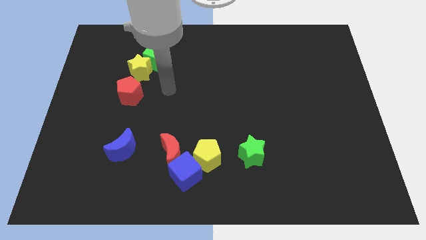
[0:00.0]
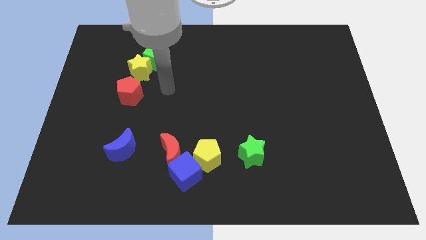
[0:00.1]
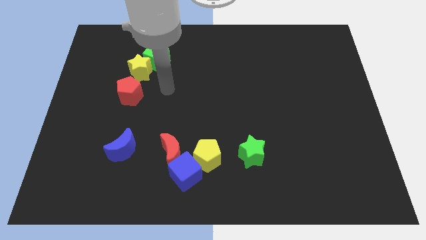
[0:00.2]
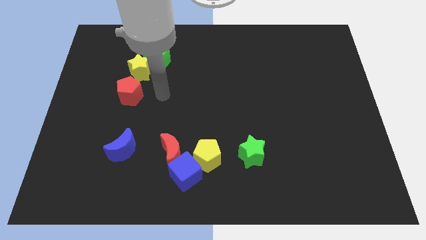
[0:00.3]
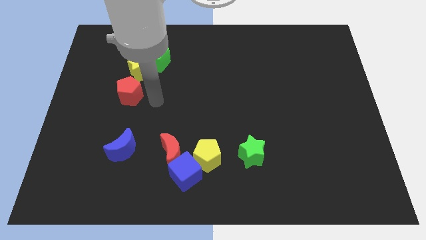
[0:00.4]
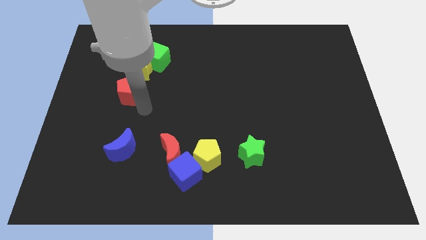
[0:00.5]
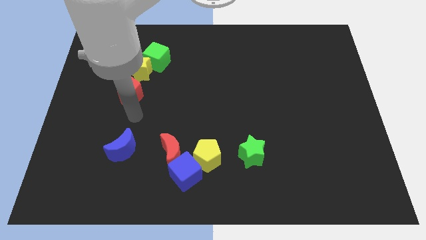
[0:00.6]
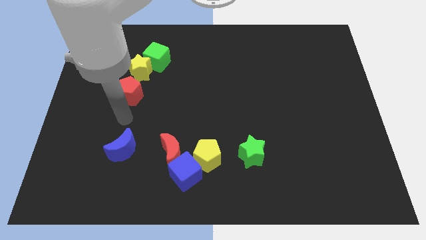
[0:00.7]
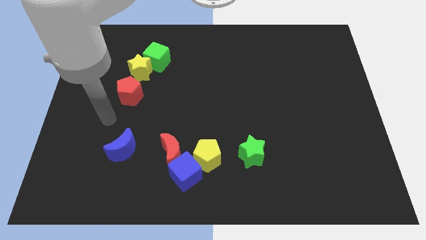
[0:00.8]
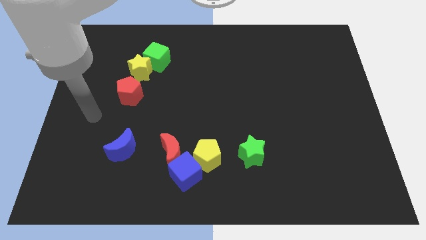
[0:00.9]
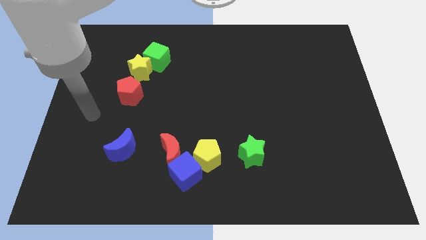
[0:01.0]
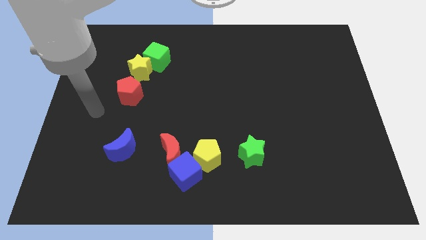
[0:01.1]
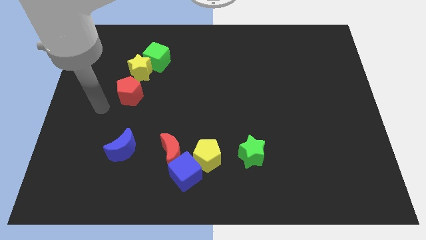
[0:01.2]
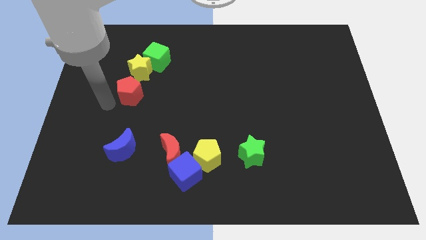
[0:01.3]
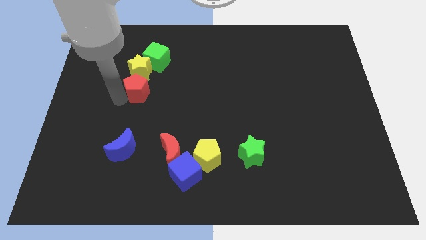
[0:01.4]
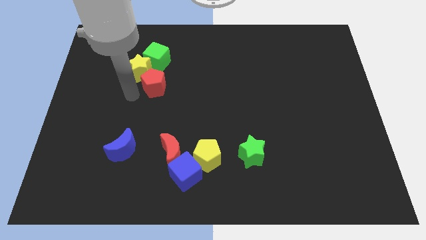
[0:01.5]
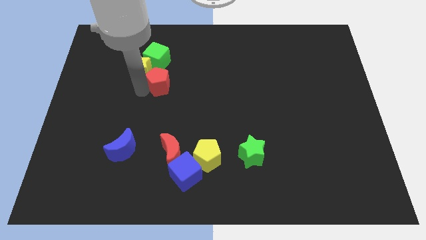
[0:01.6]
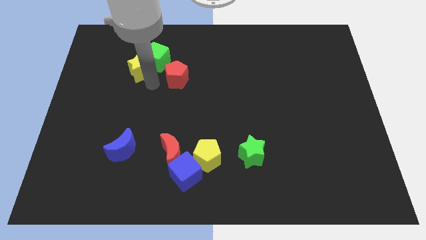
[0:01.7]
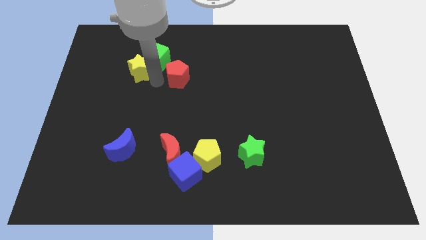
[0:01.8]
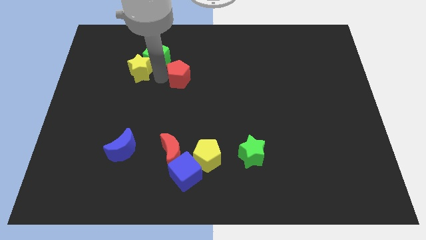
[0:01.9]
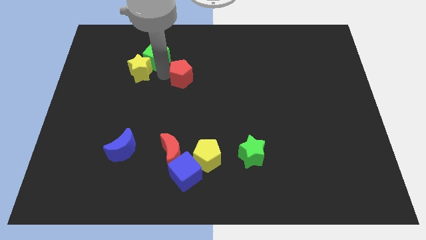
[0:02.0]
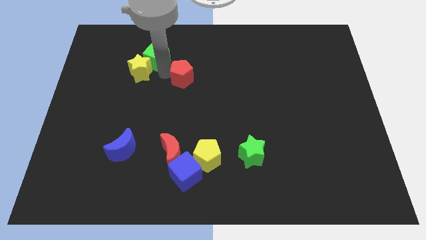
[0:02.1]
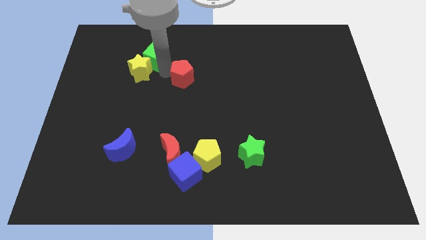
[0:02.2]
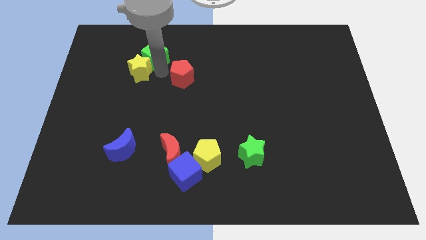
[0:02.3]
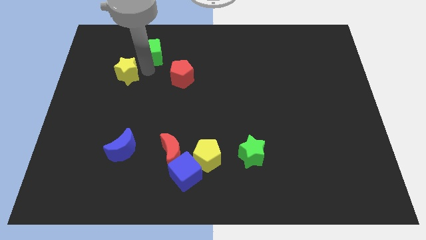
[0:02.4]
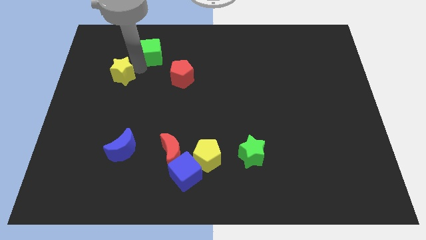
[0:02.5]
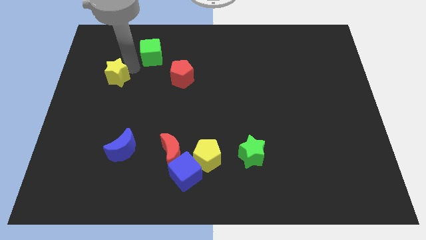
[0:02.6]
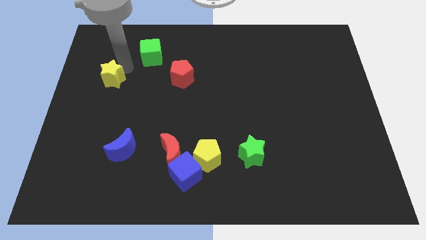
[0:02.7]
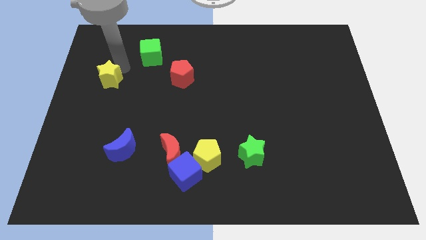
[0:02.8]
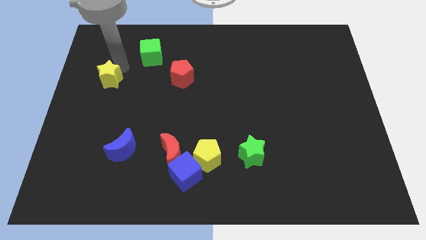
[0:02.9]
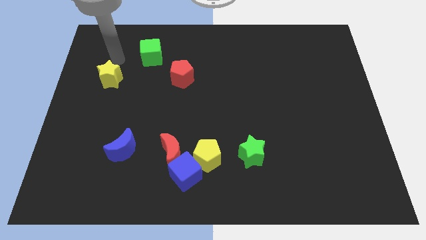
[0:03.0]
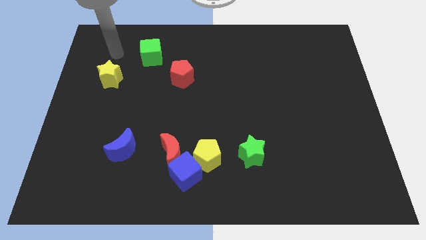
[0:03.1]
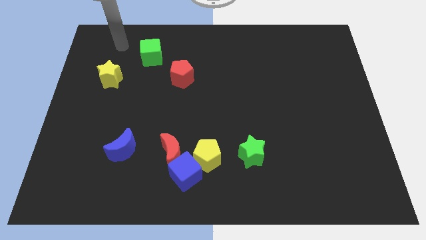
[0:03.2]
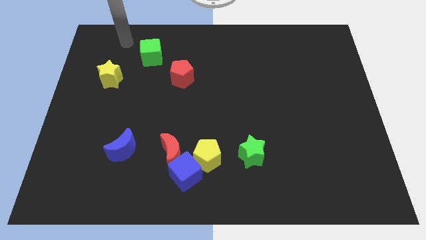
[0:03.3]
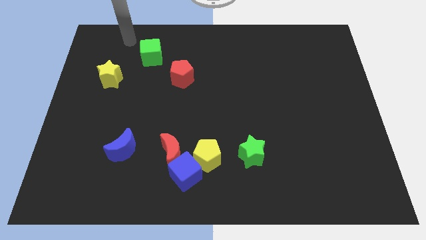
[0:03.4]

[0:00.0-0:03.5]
arrange green cube yellow star and red pentagon to form a triangle

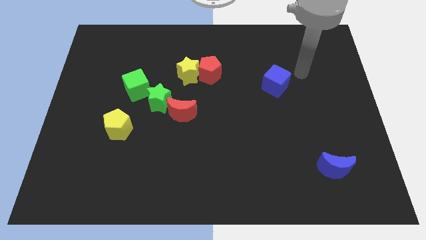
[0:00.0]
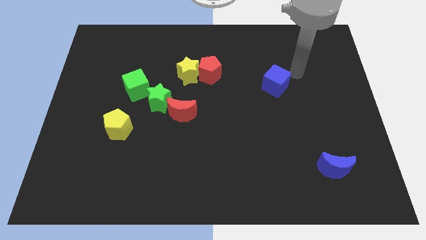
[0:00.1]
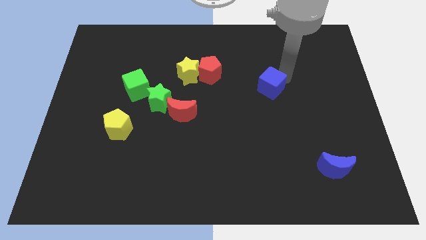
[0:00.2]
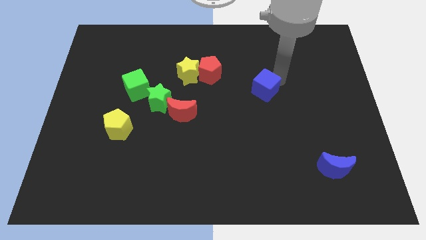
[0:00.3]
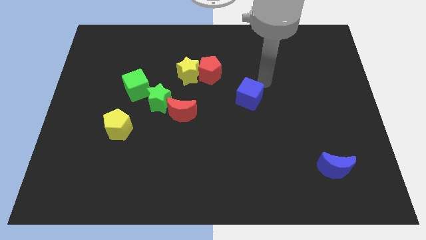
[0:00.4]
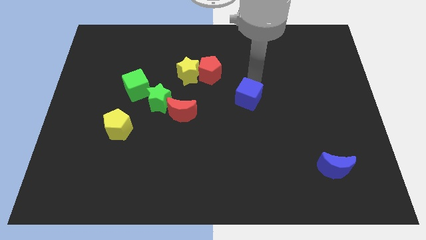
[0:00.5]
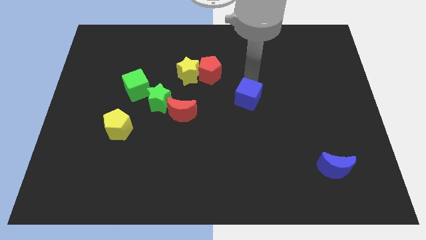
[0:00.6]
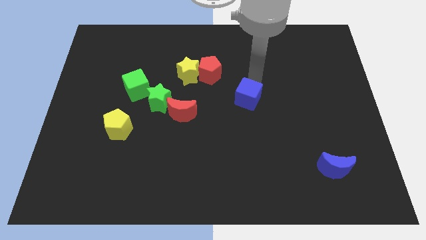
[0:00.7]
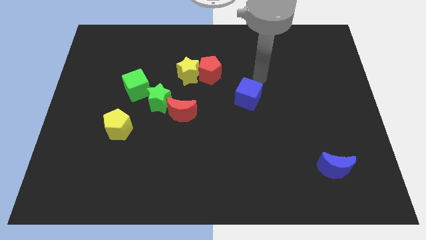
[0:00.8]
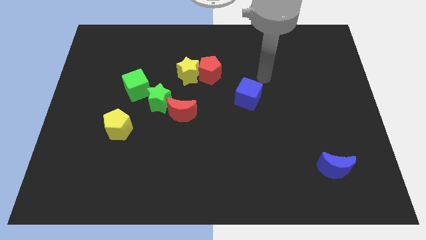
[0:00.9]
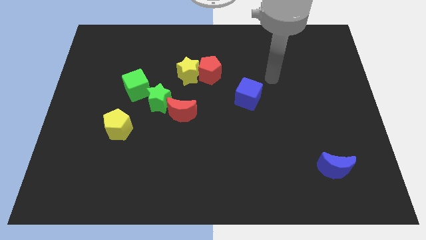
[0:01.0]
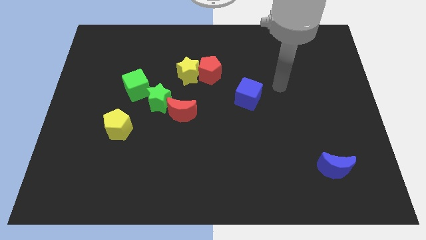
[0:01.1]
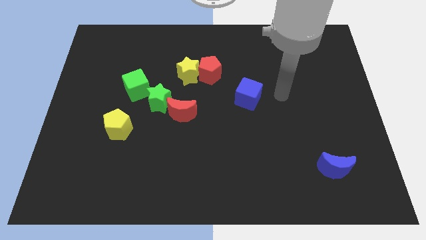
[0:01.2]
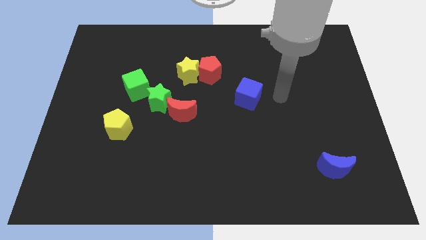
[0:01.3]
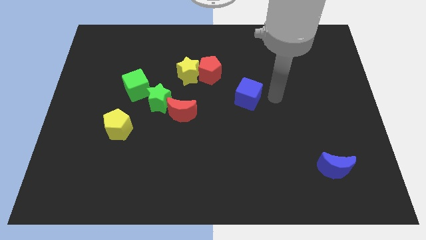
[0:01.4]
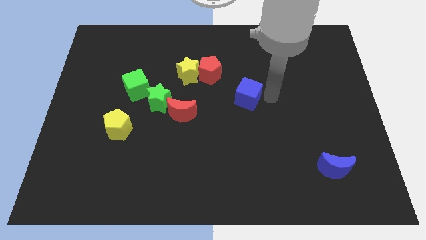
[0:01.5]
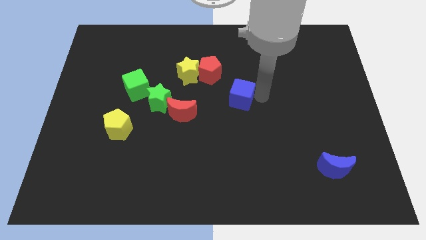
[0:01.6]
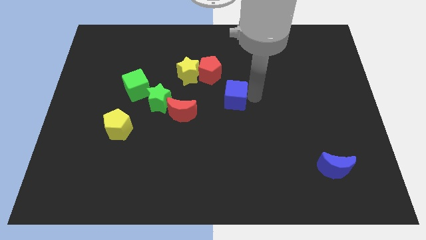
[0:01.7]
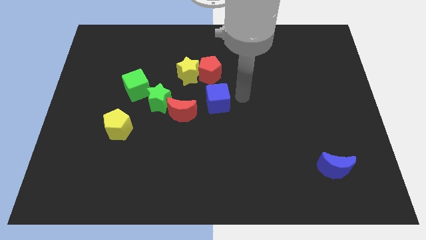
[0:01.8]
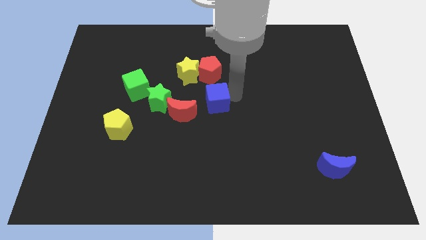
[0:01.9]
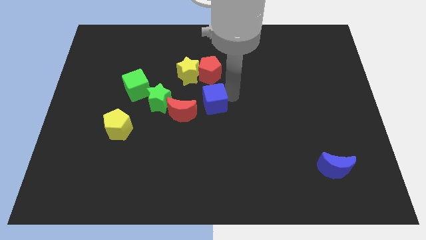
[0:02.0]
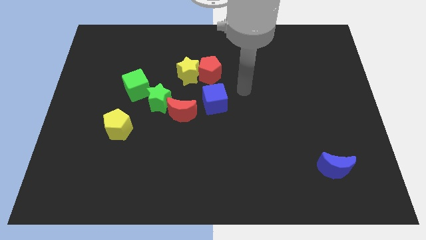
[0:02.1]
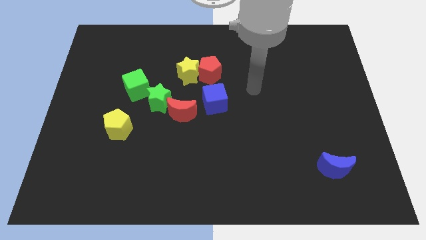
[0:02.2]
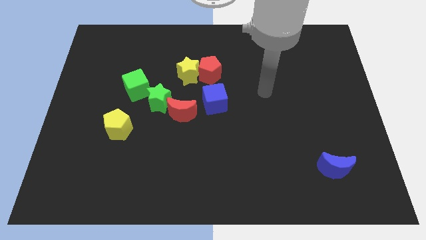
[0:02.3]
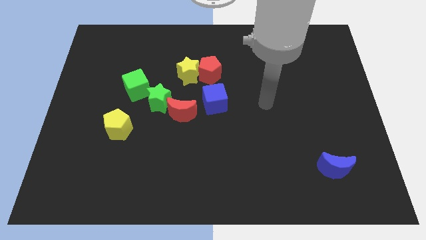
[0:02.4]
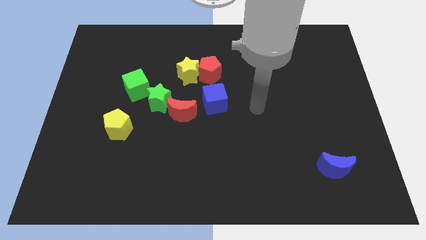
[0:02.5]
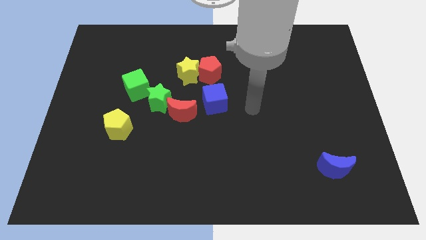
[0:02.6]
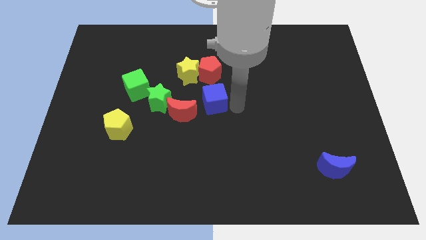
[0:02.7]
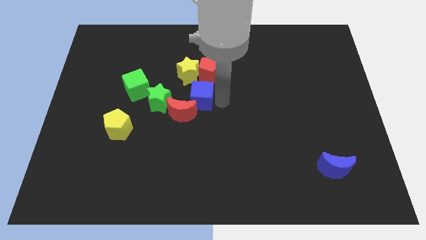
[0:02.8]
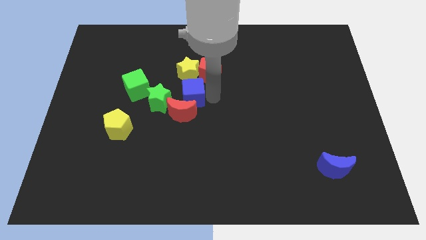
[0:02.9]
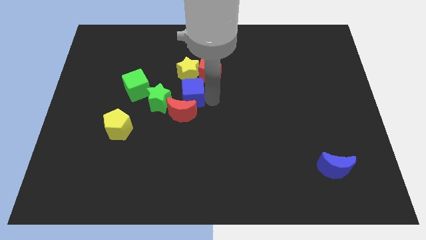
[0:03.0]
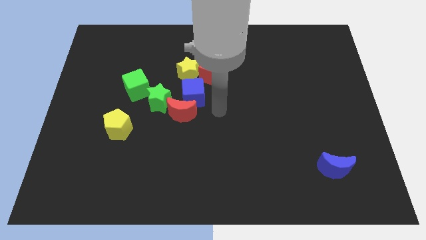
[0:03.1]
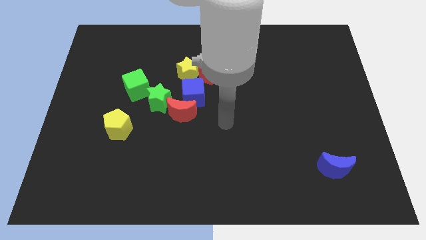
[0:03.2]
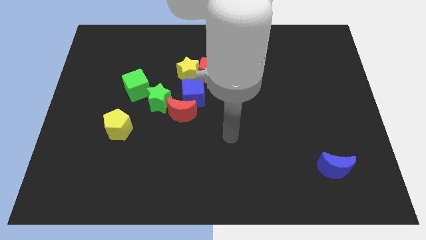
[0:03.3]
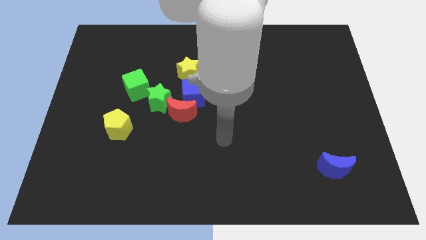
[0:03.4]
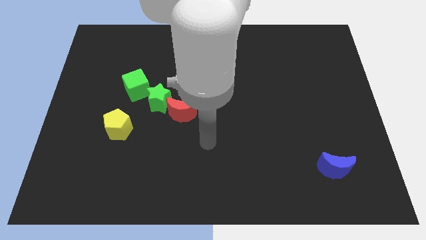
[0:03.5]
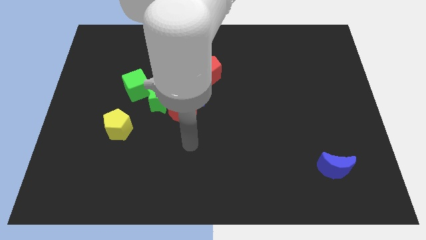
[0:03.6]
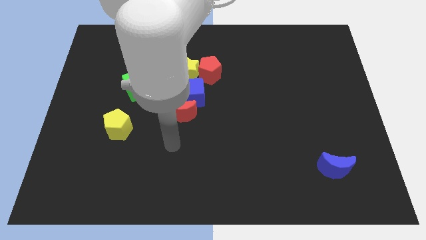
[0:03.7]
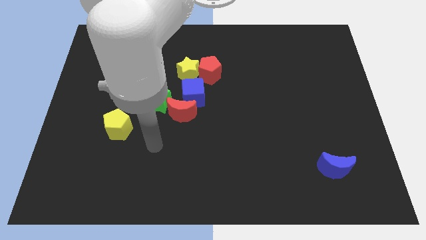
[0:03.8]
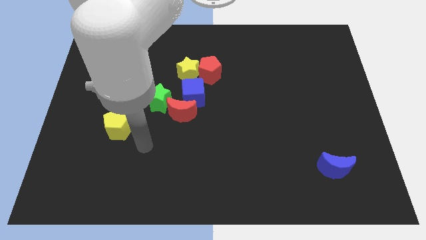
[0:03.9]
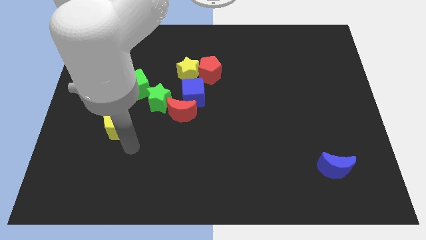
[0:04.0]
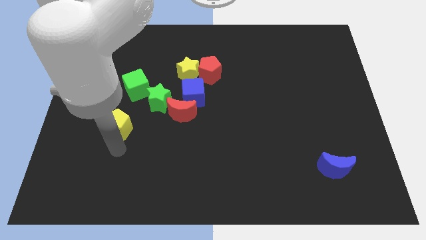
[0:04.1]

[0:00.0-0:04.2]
push the blue cube towards the bottom of the yellow star

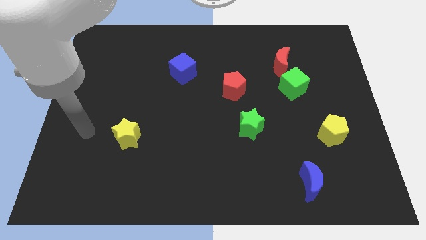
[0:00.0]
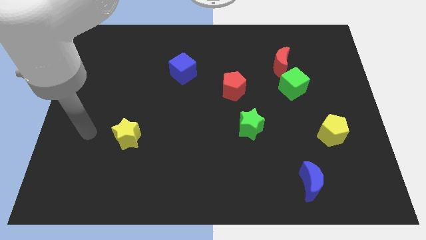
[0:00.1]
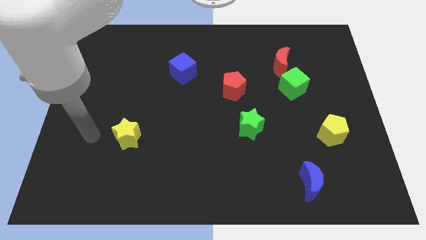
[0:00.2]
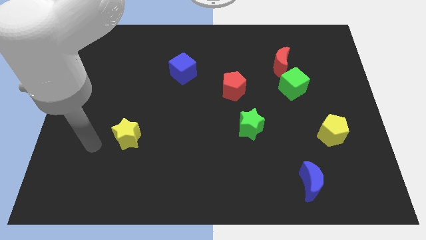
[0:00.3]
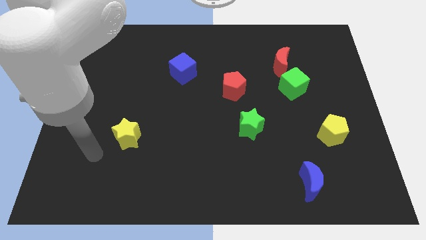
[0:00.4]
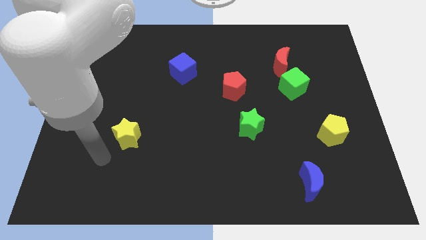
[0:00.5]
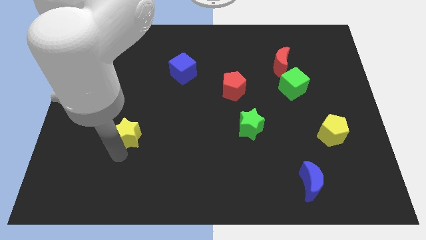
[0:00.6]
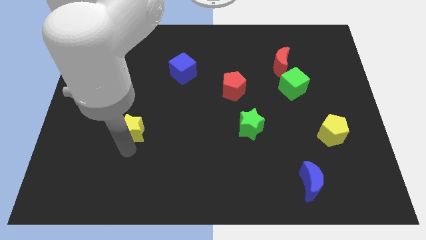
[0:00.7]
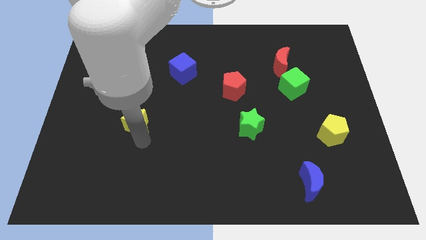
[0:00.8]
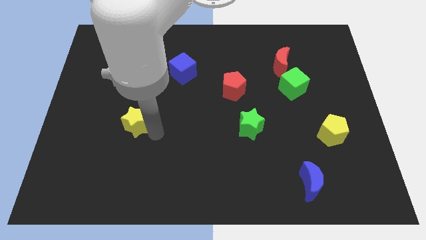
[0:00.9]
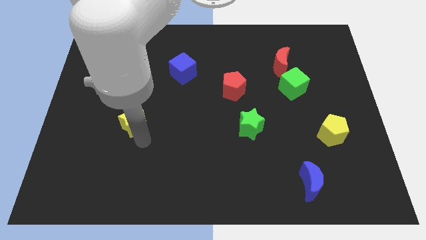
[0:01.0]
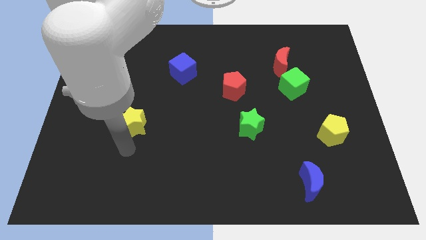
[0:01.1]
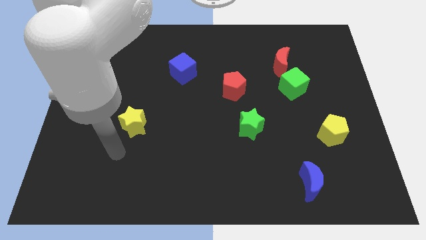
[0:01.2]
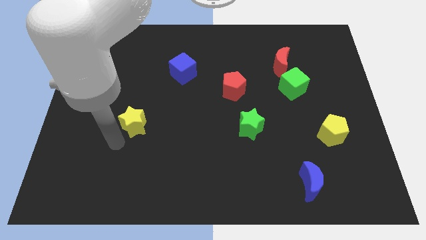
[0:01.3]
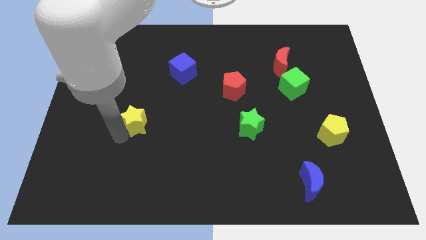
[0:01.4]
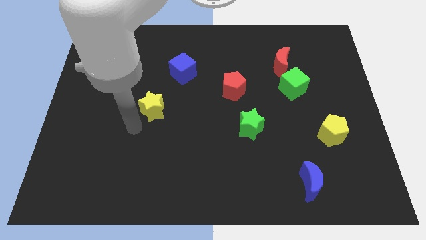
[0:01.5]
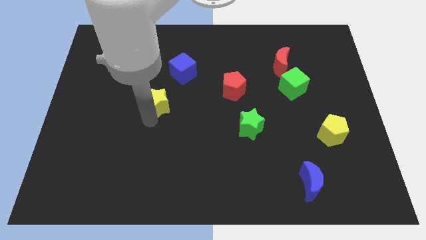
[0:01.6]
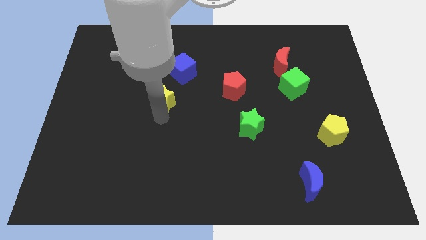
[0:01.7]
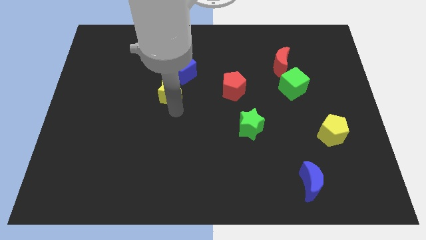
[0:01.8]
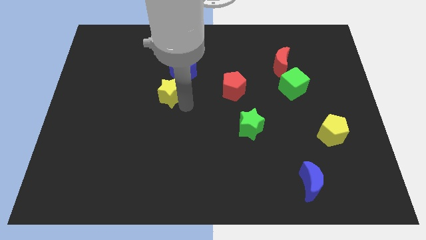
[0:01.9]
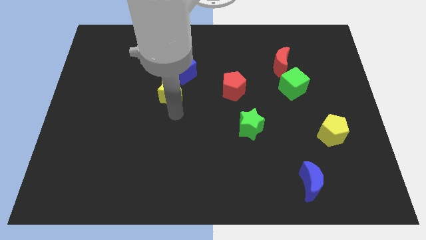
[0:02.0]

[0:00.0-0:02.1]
push the yellow star to the left of the red pentagon
